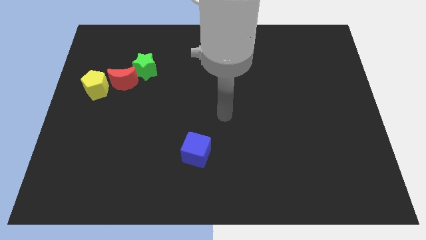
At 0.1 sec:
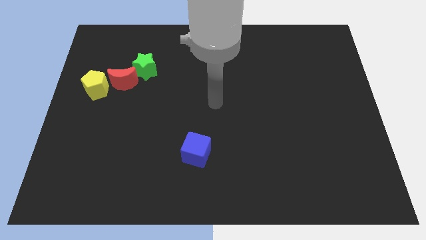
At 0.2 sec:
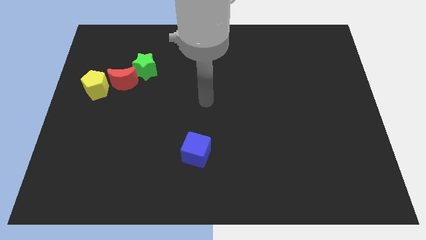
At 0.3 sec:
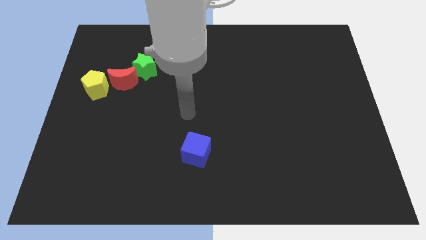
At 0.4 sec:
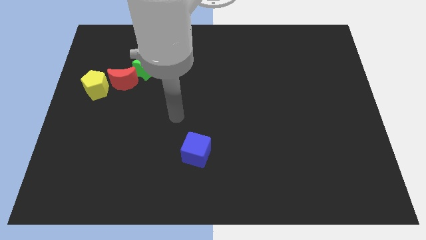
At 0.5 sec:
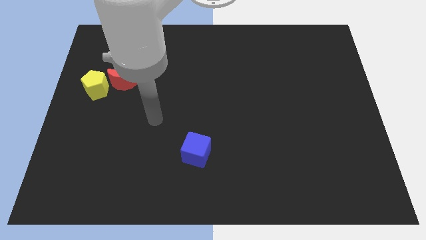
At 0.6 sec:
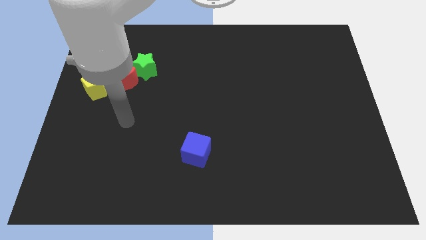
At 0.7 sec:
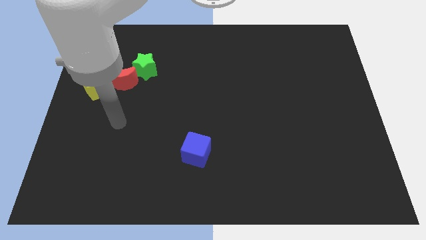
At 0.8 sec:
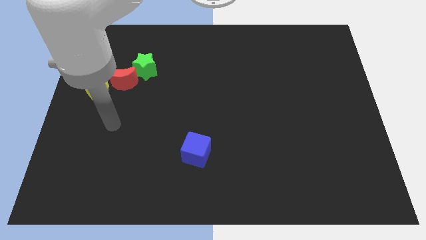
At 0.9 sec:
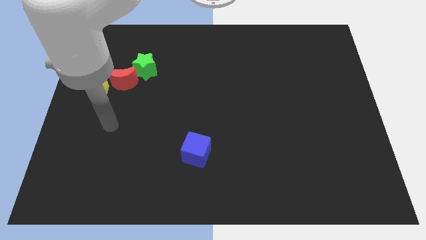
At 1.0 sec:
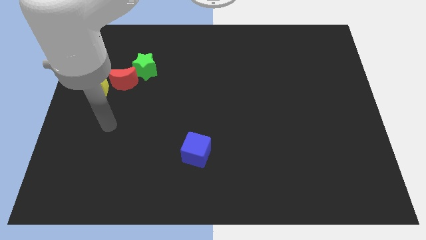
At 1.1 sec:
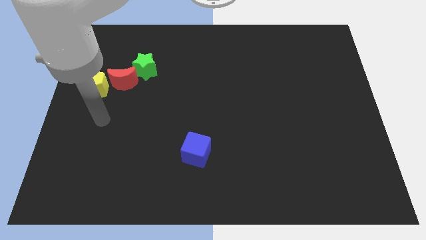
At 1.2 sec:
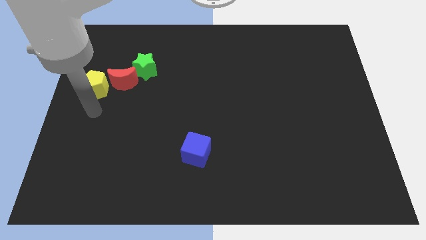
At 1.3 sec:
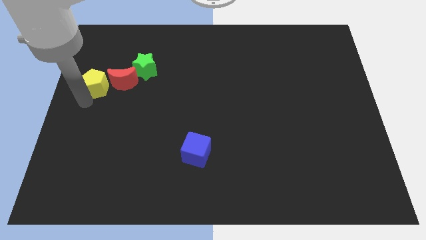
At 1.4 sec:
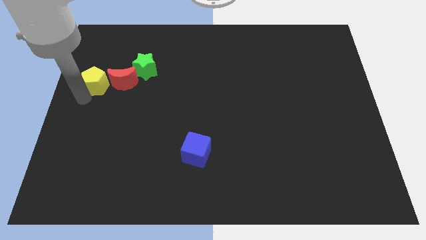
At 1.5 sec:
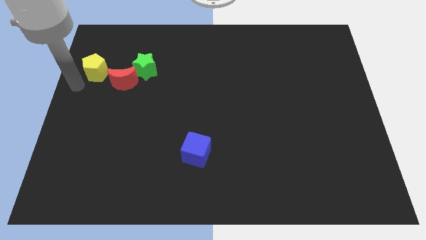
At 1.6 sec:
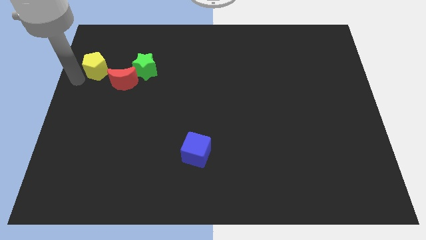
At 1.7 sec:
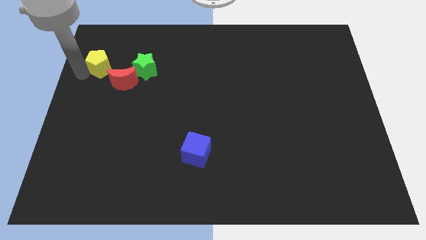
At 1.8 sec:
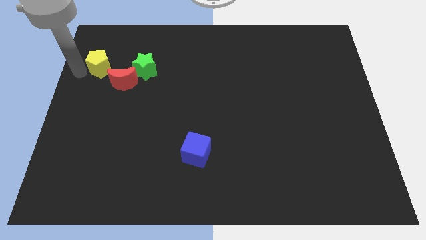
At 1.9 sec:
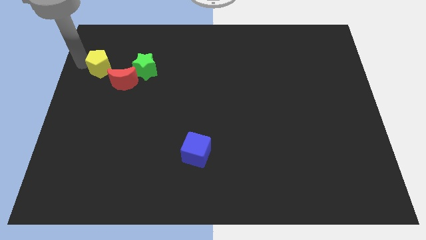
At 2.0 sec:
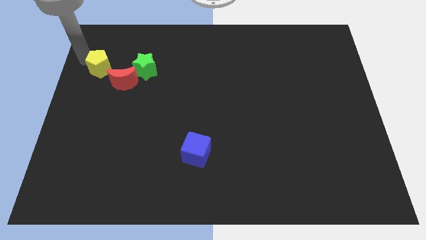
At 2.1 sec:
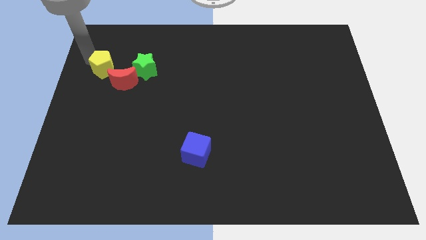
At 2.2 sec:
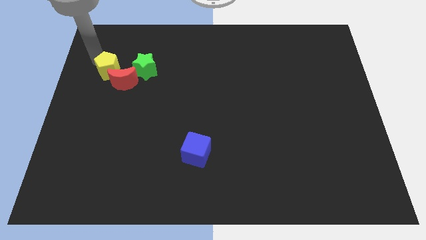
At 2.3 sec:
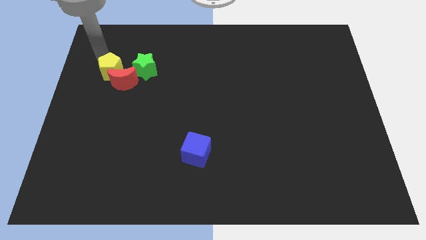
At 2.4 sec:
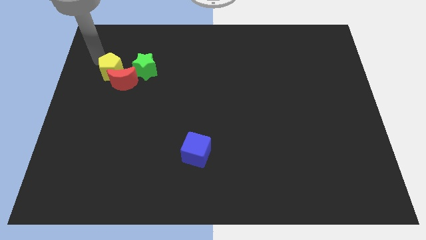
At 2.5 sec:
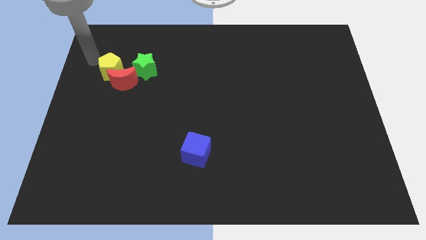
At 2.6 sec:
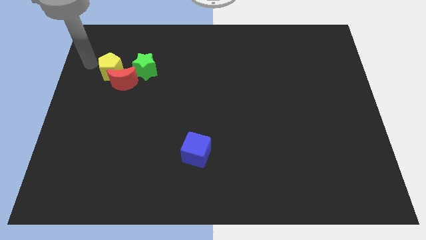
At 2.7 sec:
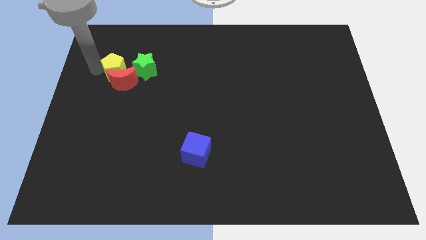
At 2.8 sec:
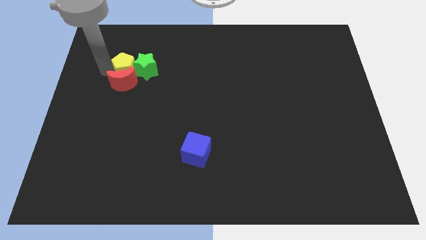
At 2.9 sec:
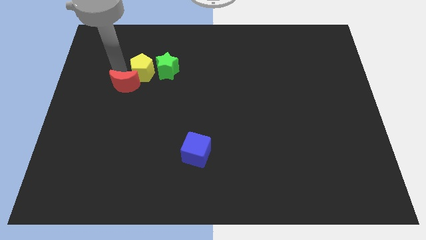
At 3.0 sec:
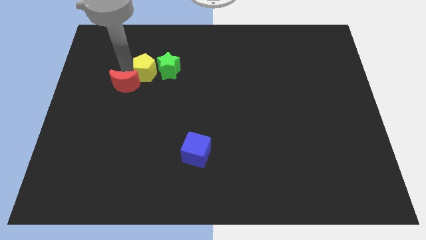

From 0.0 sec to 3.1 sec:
put the yellow block to the star

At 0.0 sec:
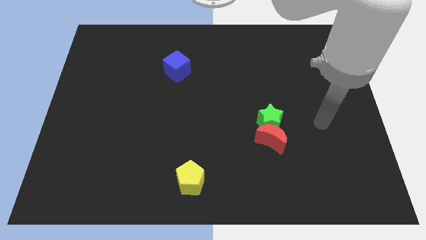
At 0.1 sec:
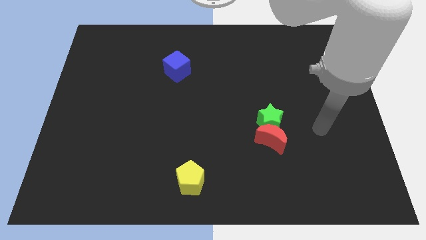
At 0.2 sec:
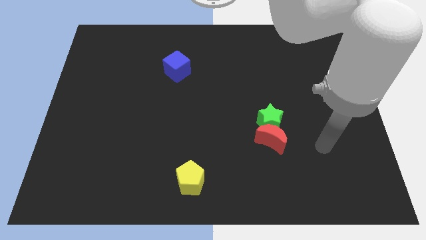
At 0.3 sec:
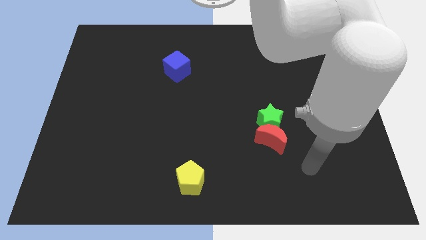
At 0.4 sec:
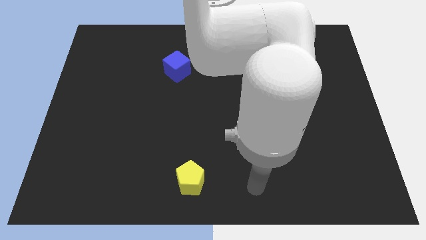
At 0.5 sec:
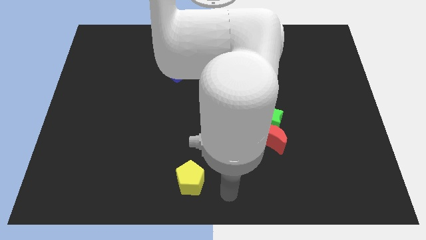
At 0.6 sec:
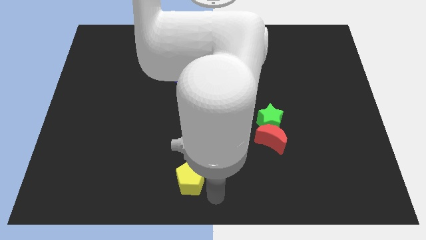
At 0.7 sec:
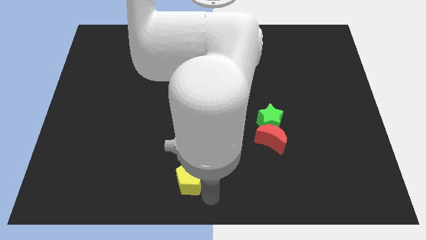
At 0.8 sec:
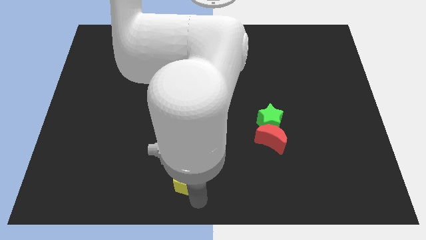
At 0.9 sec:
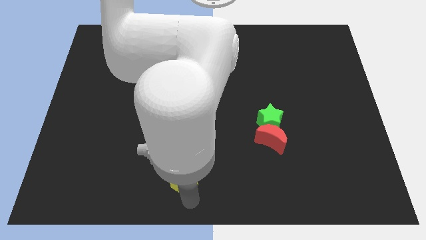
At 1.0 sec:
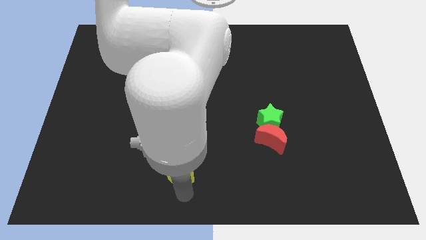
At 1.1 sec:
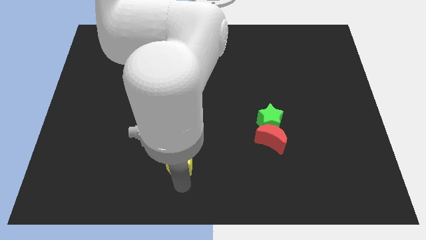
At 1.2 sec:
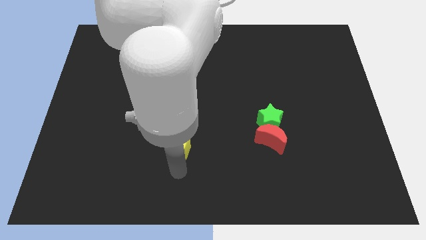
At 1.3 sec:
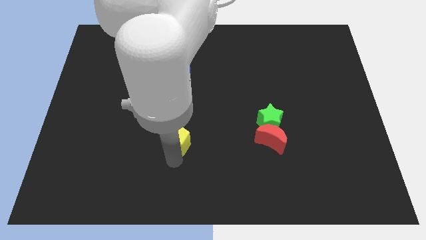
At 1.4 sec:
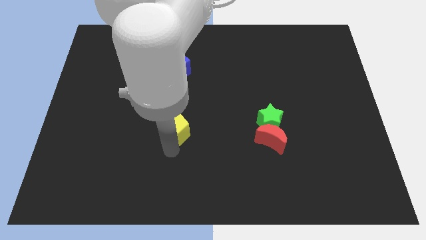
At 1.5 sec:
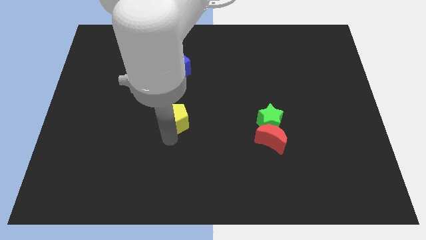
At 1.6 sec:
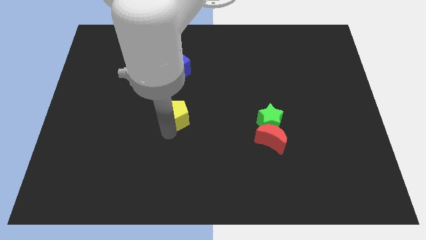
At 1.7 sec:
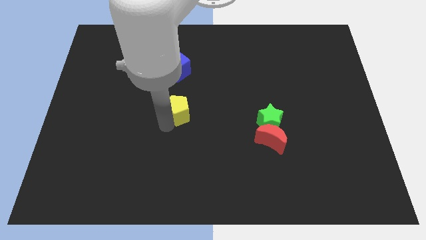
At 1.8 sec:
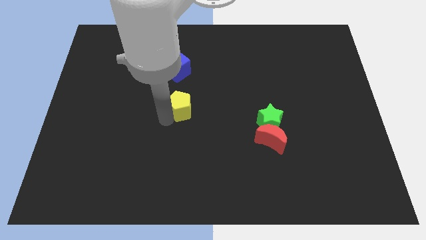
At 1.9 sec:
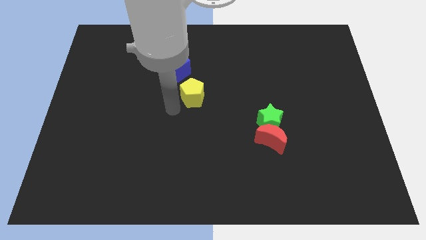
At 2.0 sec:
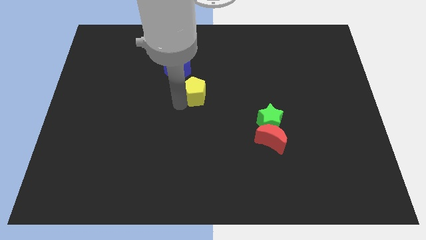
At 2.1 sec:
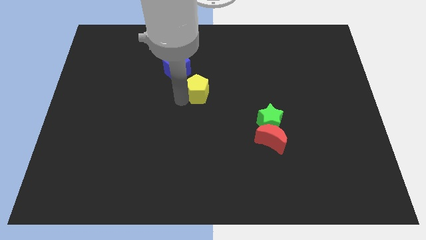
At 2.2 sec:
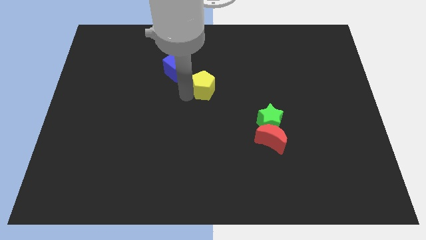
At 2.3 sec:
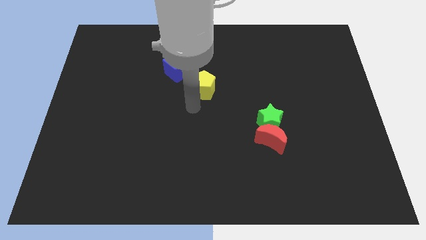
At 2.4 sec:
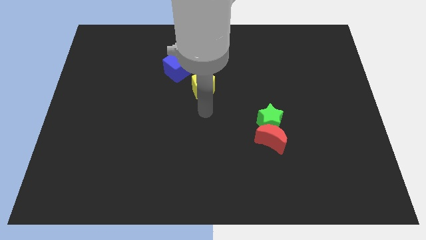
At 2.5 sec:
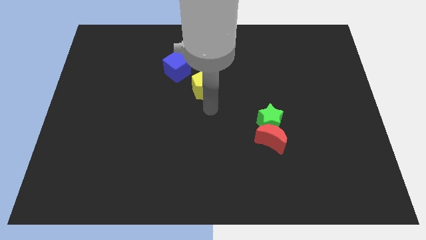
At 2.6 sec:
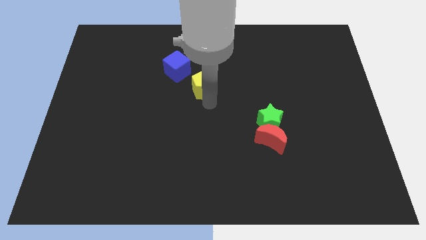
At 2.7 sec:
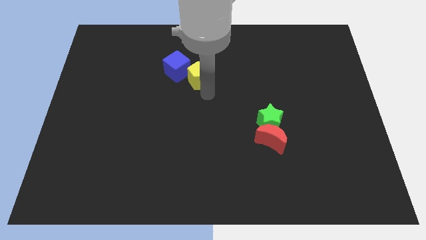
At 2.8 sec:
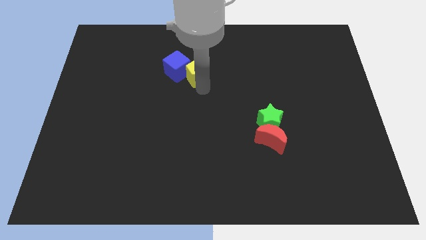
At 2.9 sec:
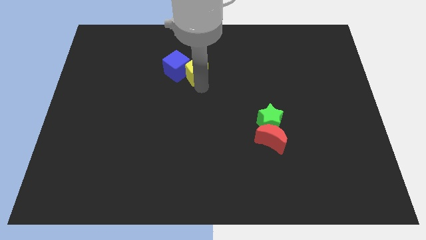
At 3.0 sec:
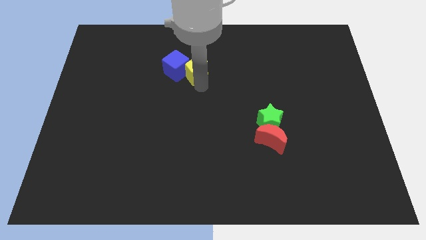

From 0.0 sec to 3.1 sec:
slide the pentagon towards the blue block

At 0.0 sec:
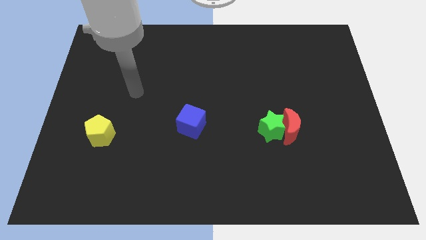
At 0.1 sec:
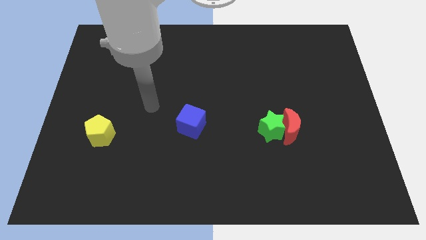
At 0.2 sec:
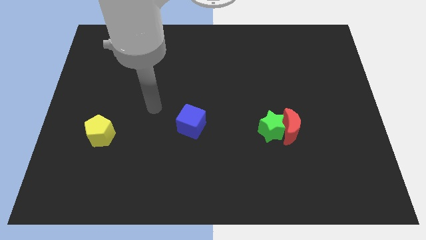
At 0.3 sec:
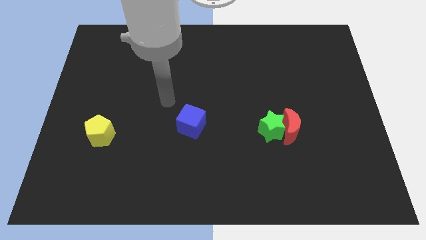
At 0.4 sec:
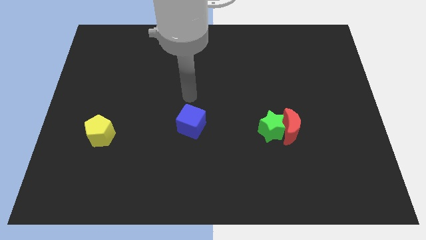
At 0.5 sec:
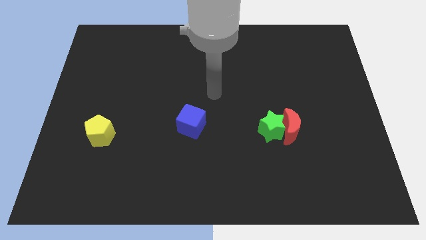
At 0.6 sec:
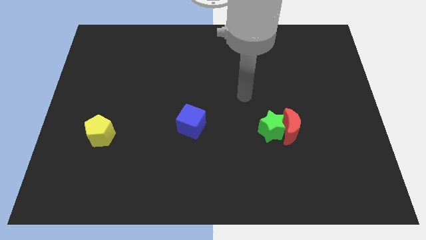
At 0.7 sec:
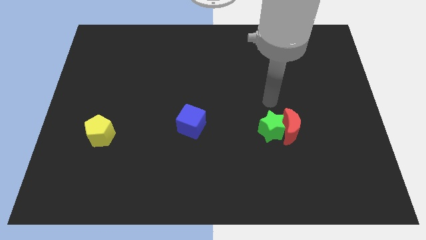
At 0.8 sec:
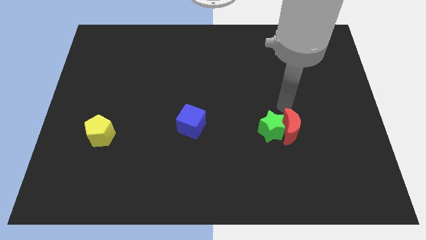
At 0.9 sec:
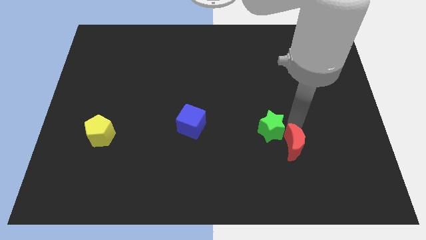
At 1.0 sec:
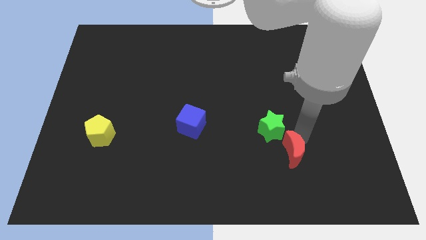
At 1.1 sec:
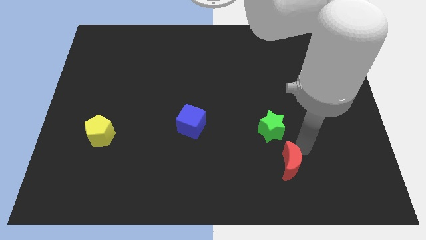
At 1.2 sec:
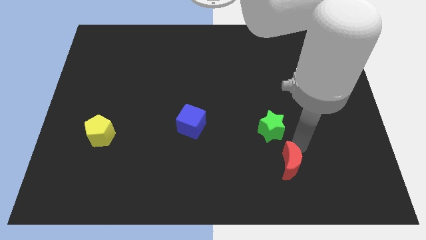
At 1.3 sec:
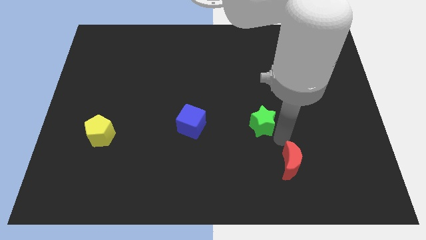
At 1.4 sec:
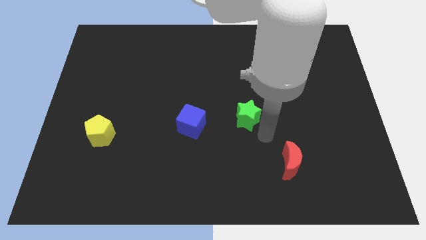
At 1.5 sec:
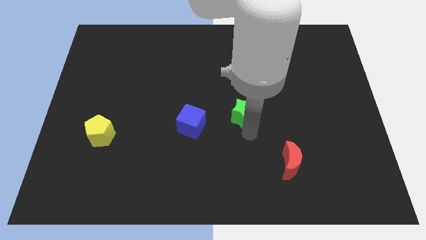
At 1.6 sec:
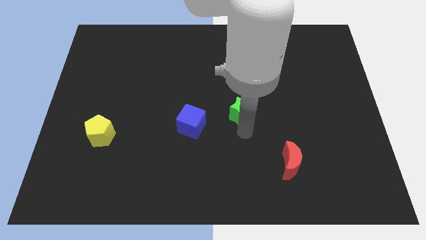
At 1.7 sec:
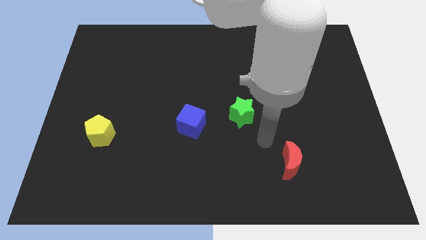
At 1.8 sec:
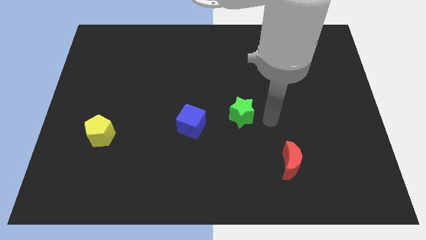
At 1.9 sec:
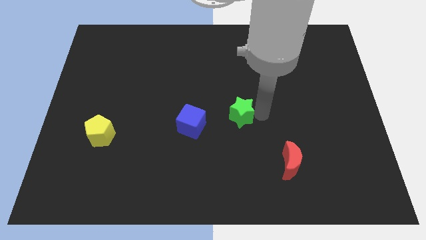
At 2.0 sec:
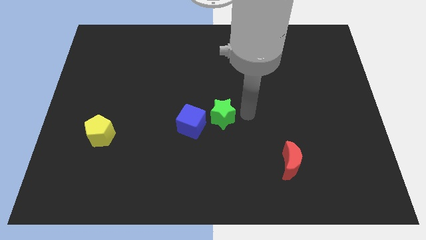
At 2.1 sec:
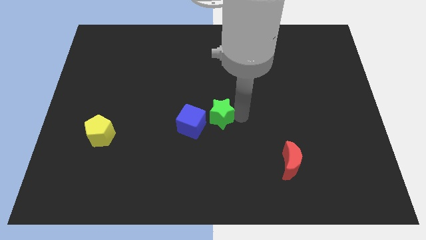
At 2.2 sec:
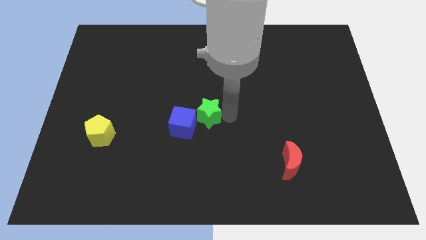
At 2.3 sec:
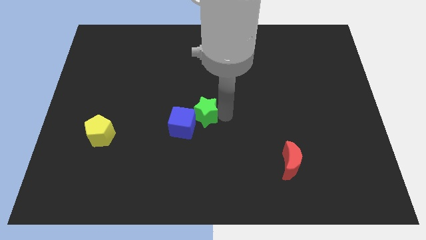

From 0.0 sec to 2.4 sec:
push the green block close to the blue block

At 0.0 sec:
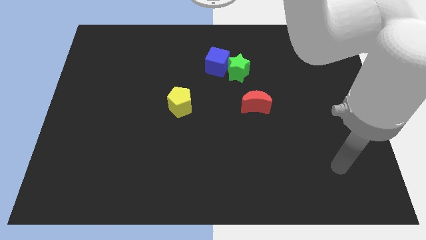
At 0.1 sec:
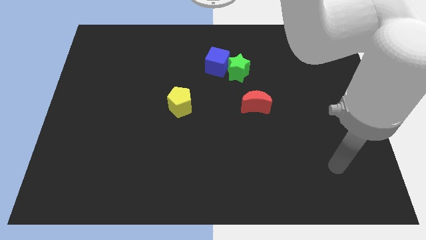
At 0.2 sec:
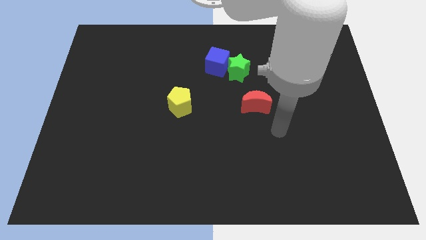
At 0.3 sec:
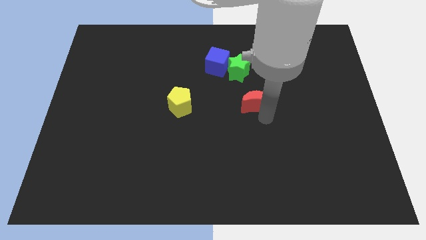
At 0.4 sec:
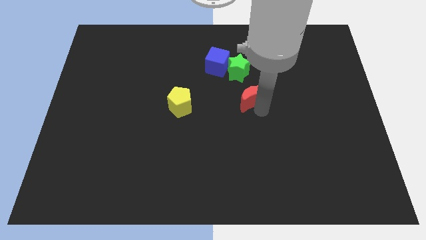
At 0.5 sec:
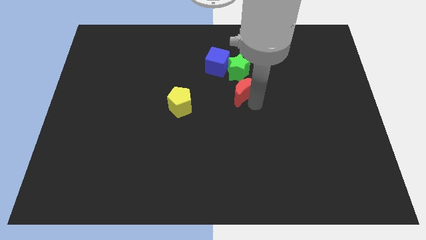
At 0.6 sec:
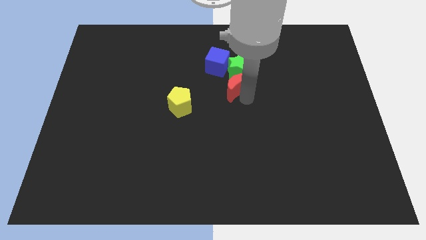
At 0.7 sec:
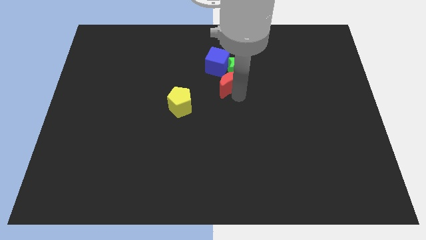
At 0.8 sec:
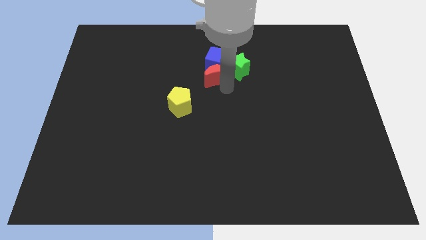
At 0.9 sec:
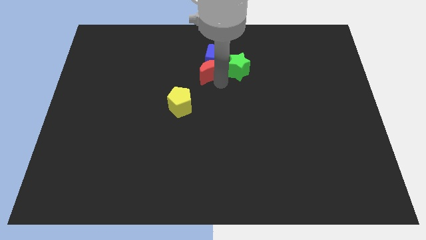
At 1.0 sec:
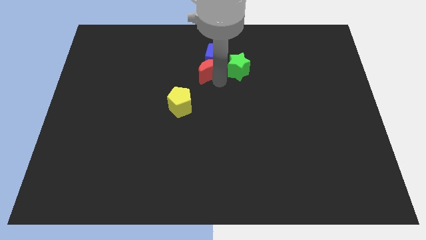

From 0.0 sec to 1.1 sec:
push the red moon close to the blue cube
